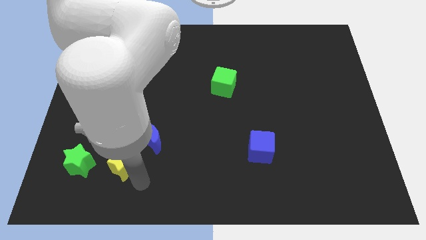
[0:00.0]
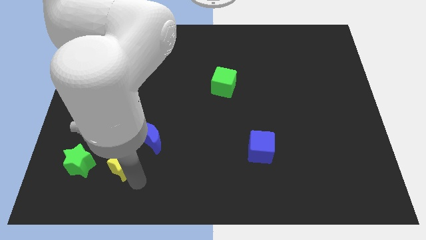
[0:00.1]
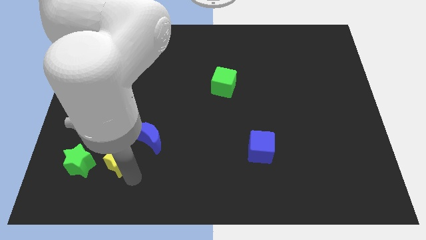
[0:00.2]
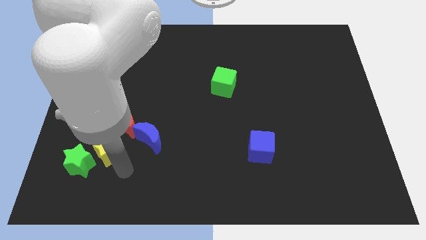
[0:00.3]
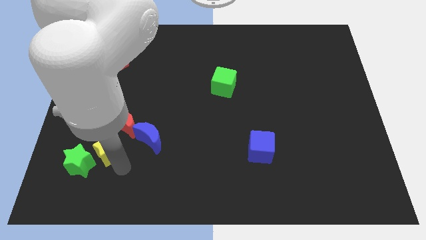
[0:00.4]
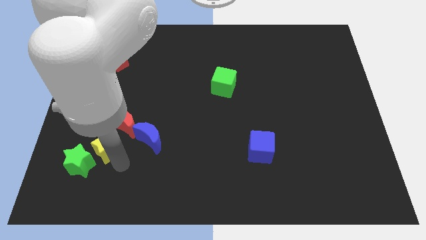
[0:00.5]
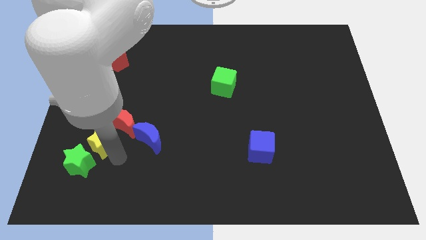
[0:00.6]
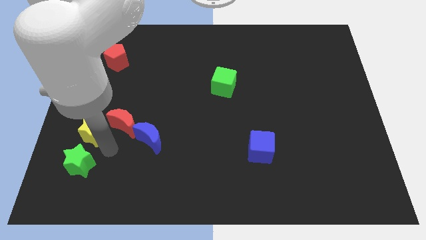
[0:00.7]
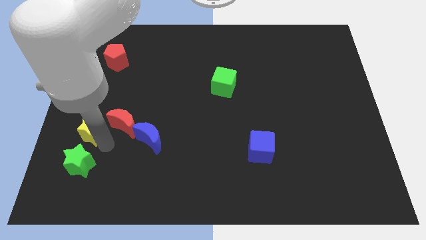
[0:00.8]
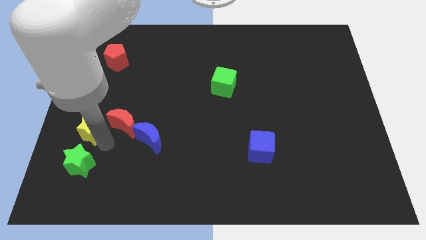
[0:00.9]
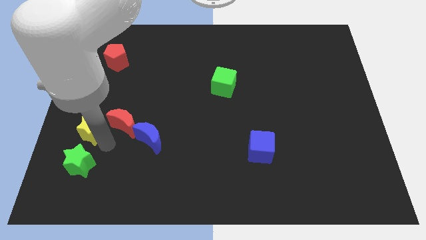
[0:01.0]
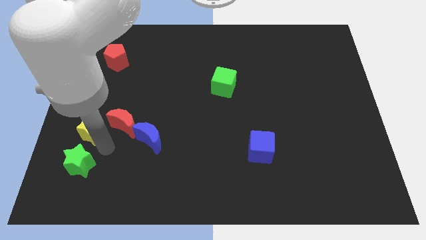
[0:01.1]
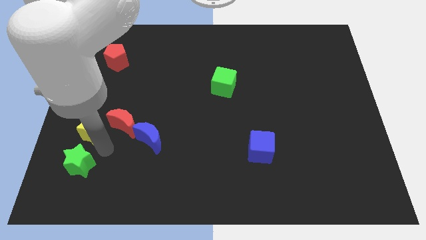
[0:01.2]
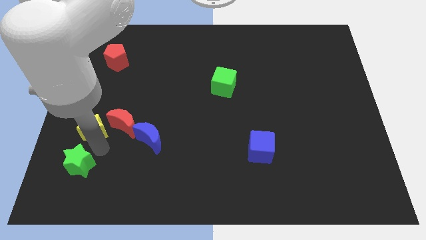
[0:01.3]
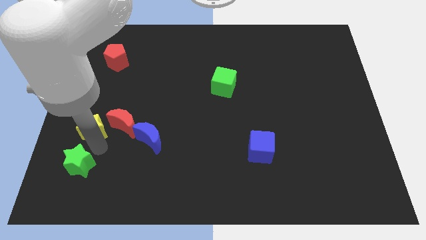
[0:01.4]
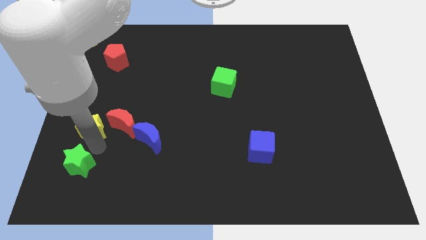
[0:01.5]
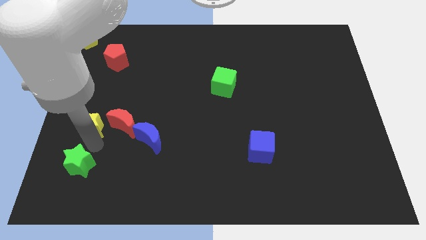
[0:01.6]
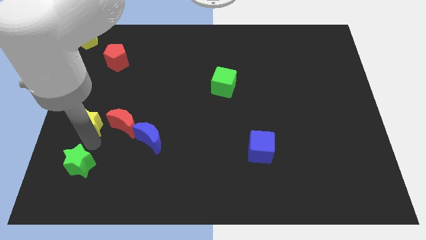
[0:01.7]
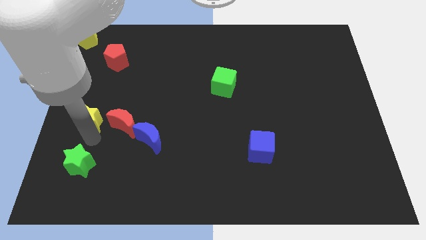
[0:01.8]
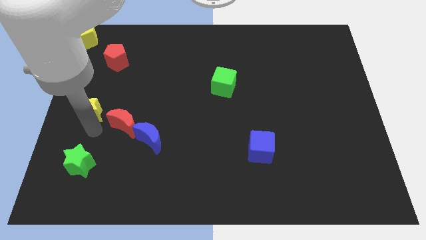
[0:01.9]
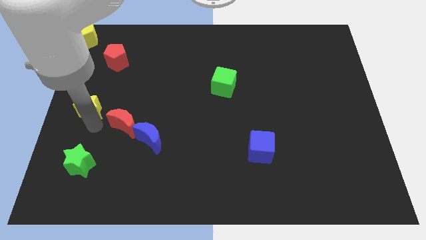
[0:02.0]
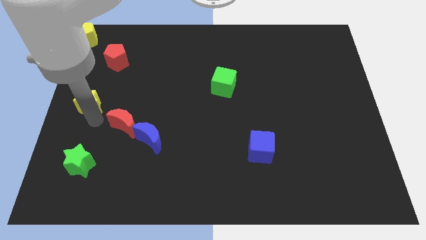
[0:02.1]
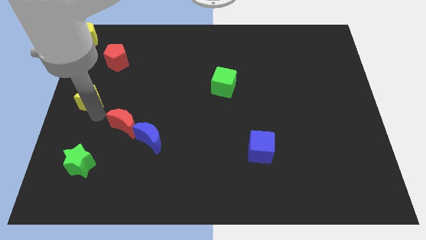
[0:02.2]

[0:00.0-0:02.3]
move the yellow star vertically above the green star

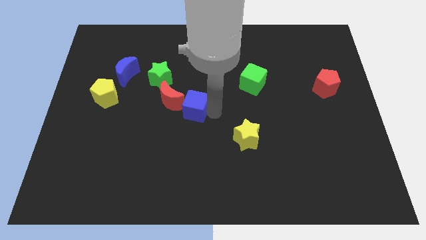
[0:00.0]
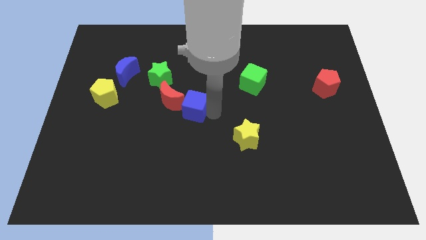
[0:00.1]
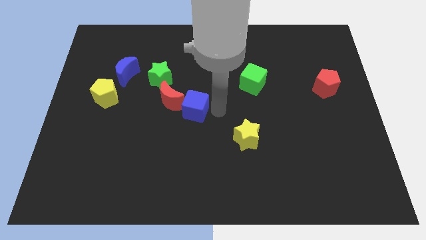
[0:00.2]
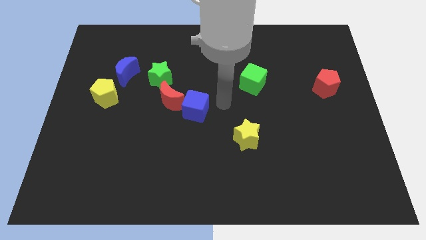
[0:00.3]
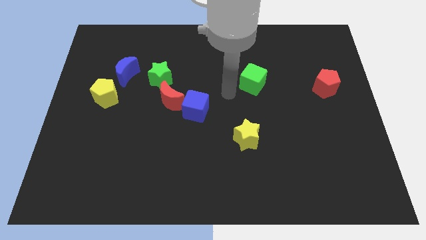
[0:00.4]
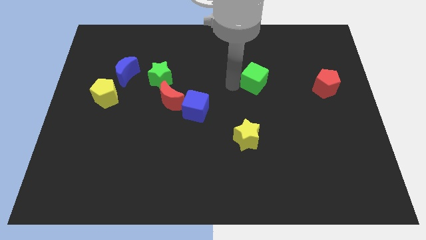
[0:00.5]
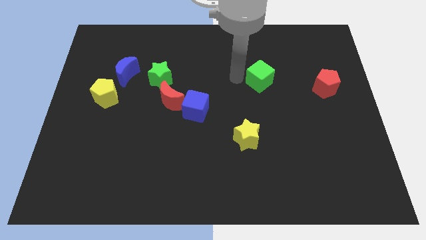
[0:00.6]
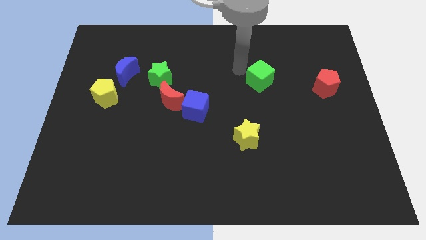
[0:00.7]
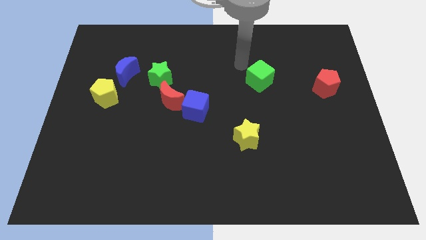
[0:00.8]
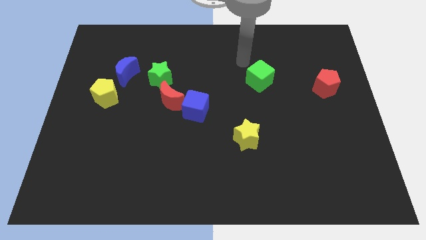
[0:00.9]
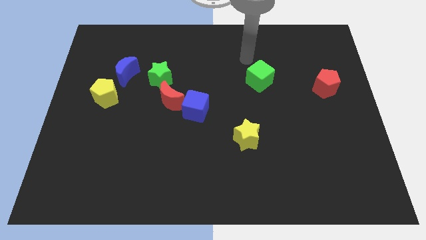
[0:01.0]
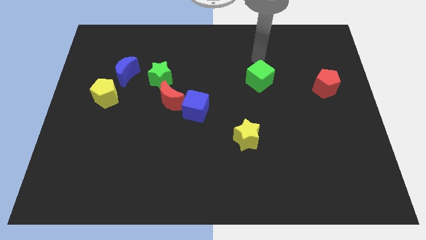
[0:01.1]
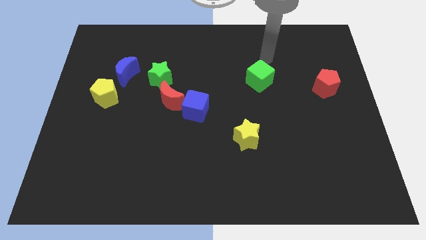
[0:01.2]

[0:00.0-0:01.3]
move the arm to the top side of the green cube

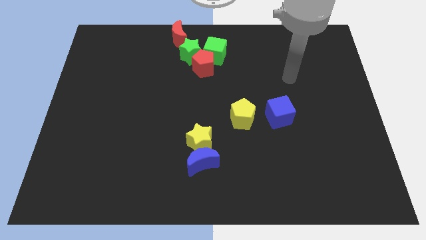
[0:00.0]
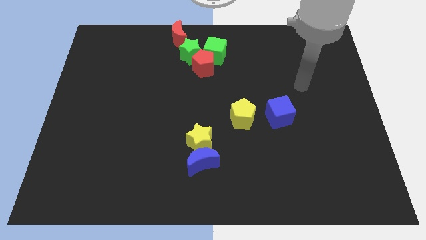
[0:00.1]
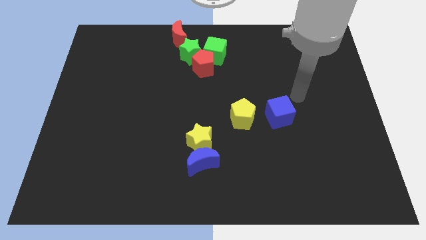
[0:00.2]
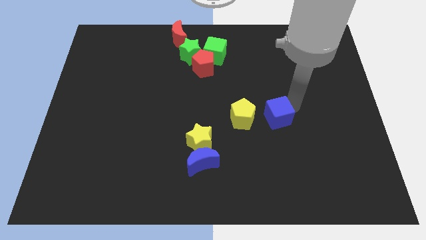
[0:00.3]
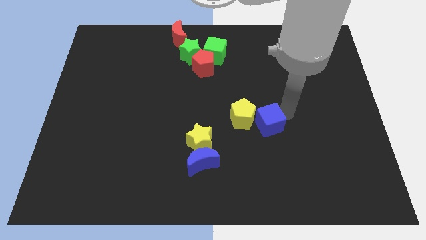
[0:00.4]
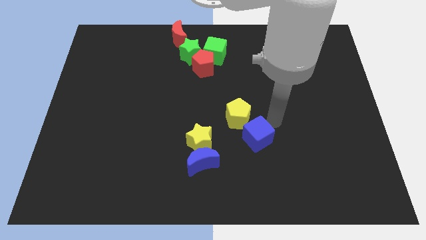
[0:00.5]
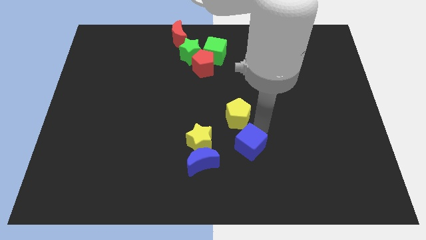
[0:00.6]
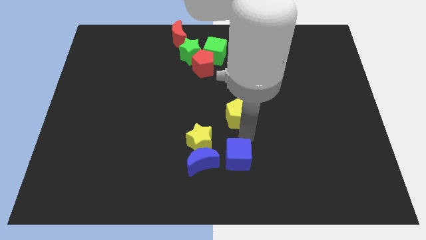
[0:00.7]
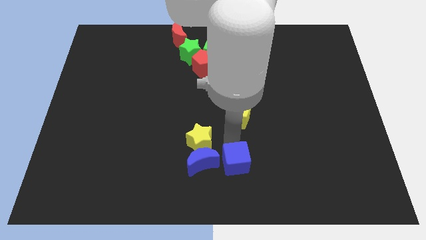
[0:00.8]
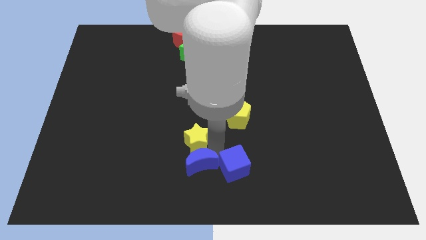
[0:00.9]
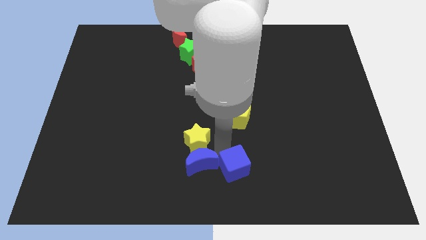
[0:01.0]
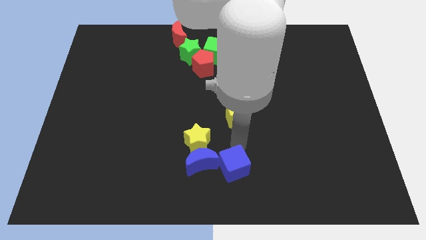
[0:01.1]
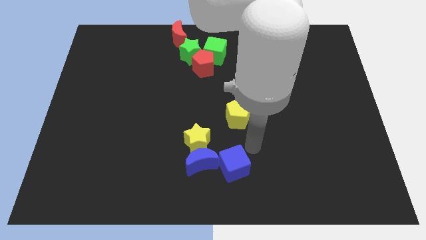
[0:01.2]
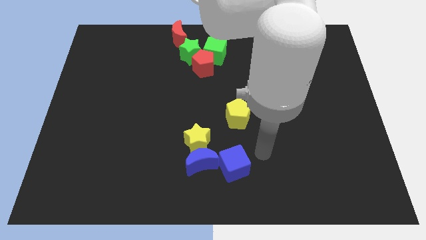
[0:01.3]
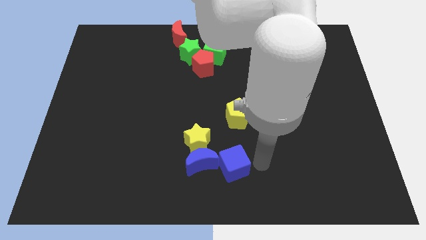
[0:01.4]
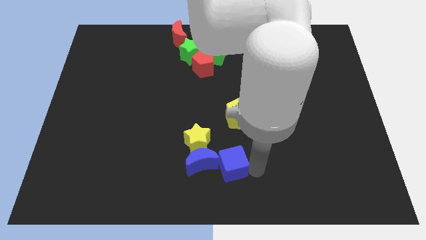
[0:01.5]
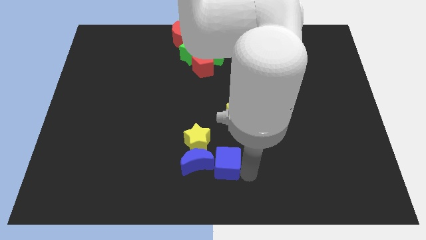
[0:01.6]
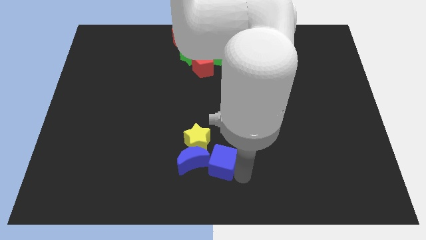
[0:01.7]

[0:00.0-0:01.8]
move the blue cube to the right of the blue crescent

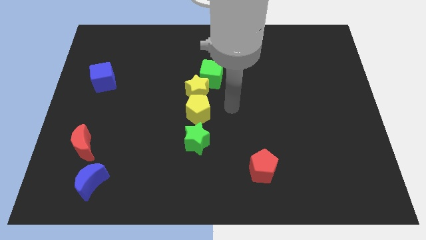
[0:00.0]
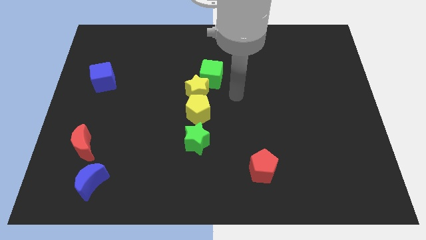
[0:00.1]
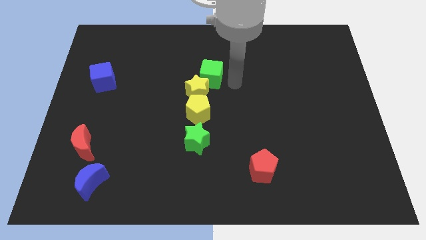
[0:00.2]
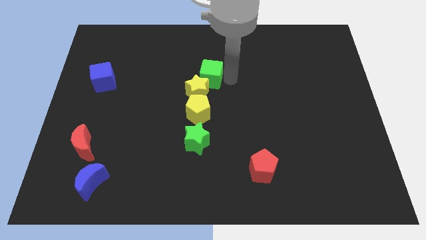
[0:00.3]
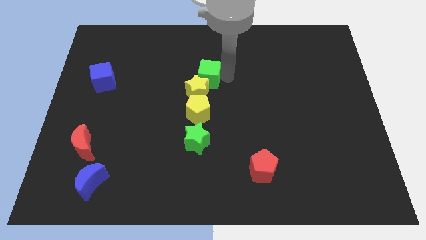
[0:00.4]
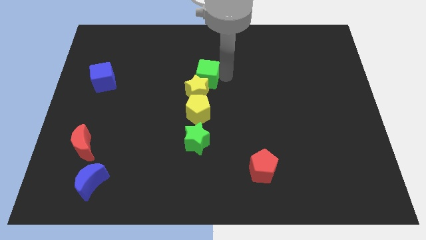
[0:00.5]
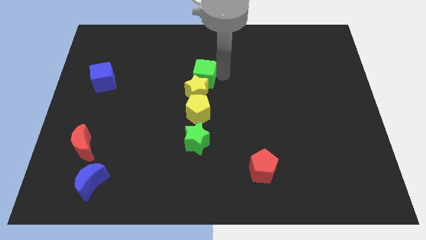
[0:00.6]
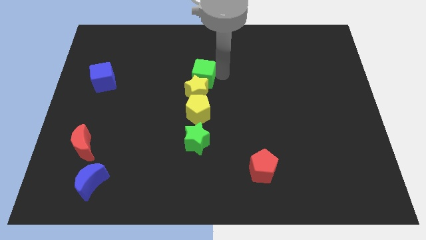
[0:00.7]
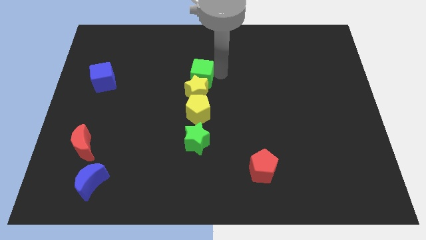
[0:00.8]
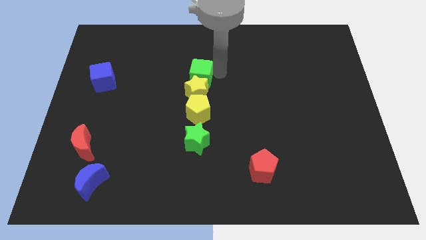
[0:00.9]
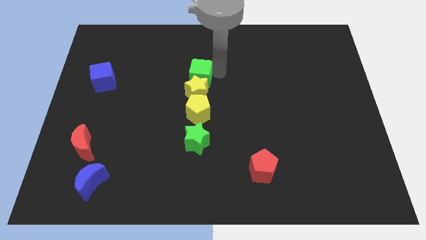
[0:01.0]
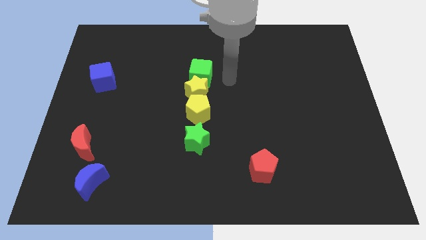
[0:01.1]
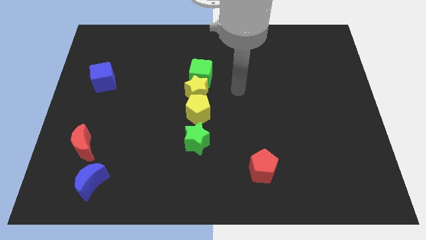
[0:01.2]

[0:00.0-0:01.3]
move the green cube to the top of the yellow star

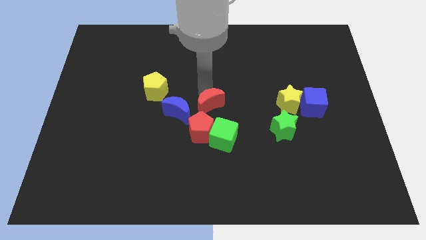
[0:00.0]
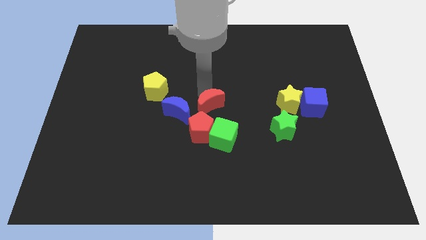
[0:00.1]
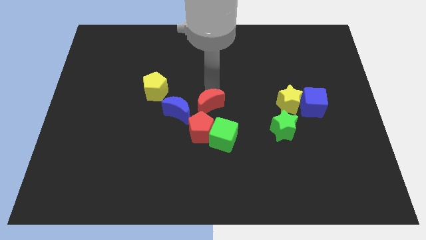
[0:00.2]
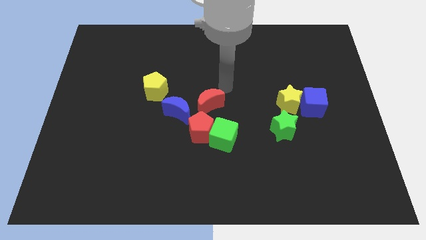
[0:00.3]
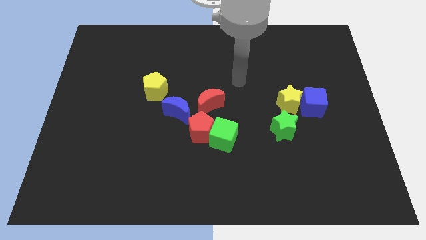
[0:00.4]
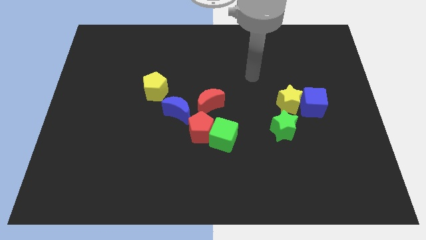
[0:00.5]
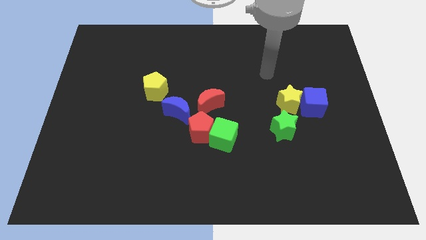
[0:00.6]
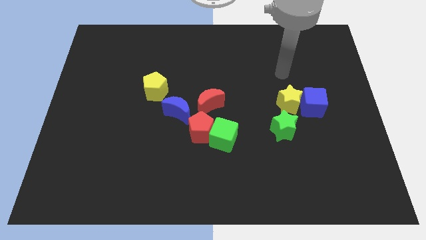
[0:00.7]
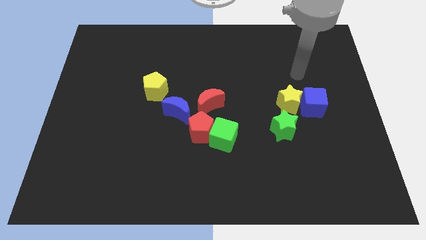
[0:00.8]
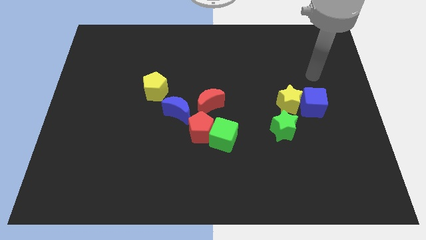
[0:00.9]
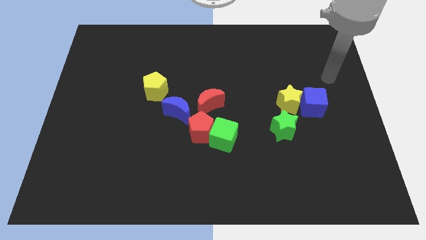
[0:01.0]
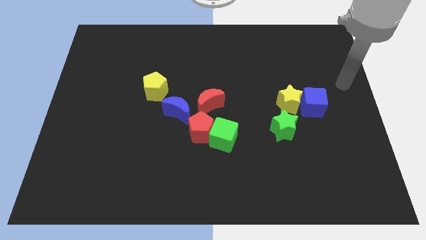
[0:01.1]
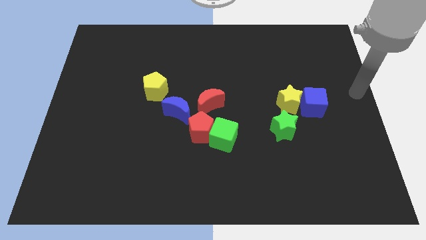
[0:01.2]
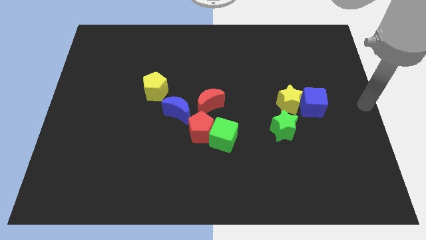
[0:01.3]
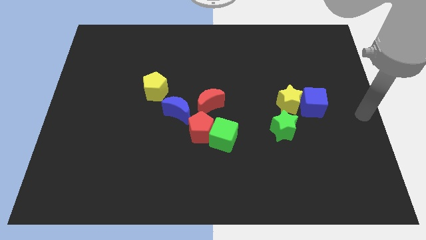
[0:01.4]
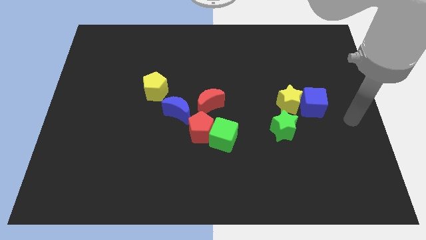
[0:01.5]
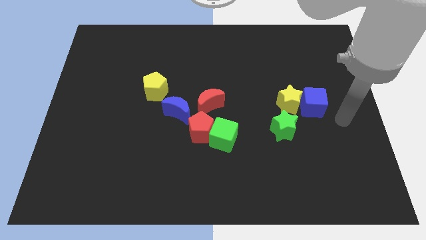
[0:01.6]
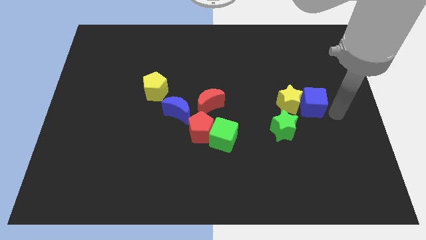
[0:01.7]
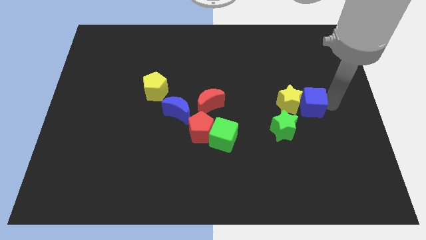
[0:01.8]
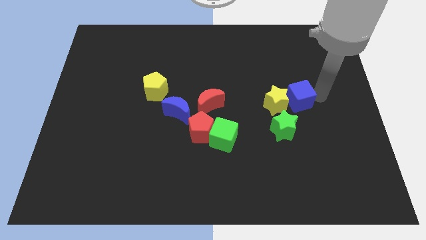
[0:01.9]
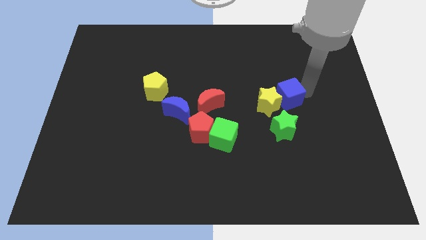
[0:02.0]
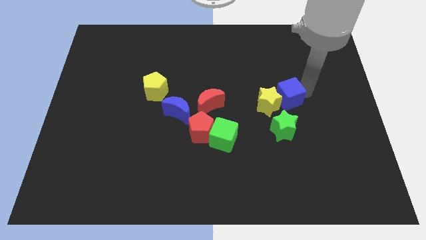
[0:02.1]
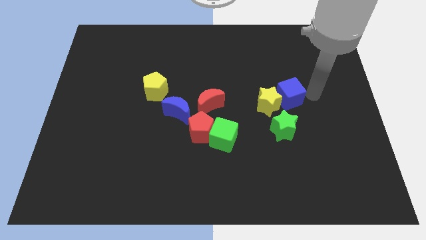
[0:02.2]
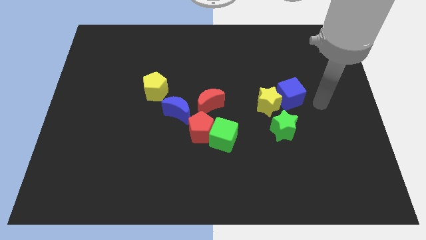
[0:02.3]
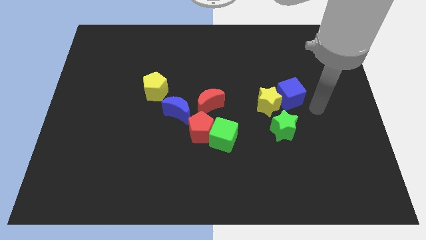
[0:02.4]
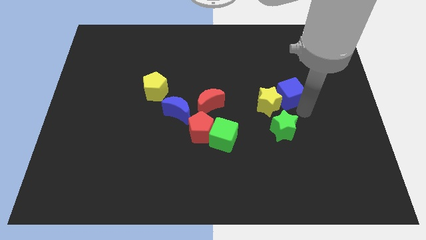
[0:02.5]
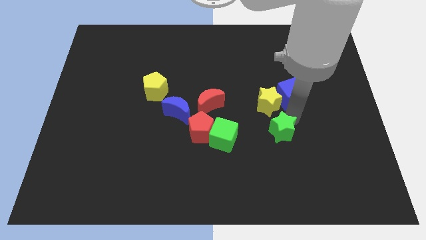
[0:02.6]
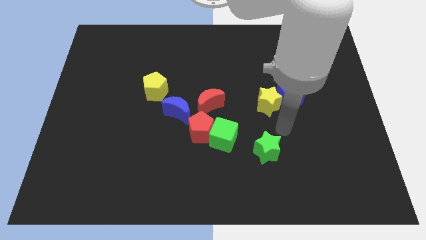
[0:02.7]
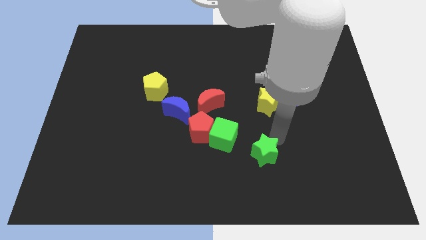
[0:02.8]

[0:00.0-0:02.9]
push the blue cube along with the yellow star towards the left side of the board
